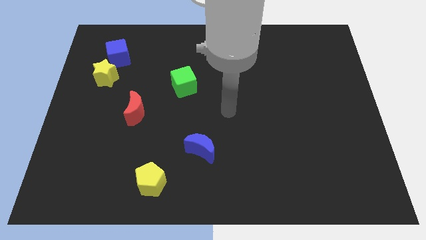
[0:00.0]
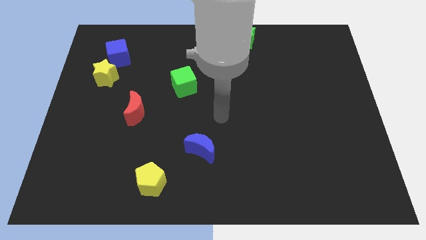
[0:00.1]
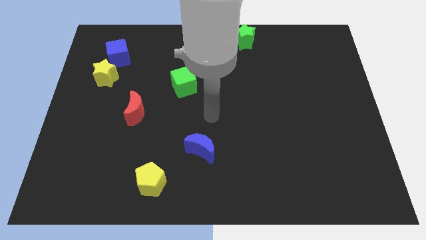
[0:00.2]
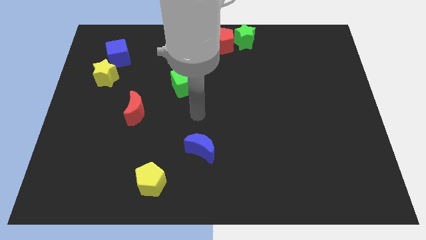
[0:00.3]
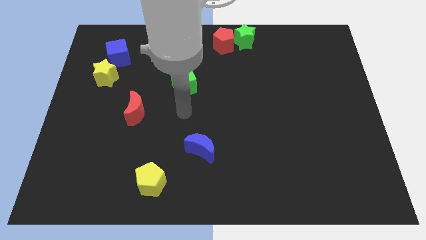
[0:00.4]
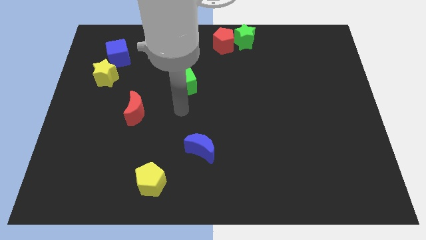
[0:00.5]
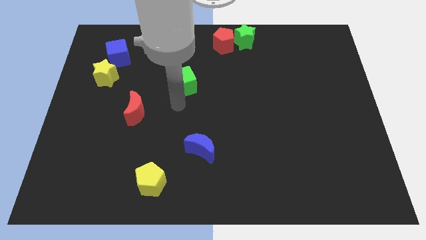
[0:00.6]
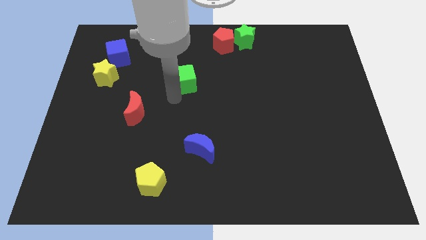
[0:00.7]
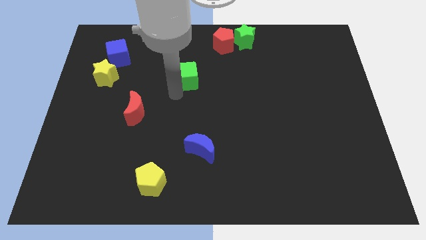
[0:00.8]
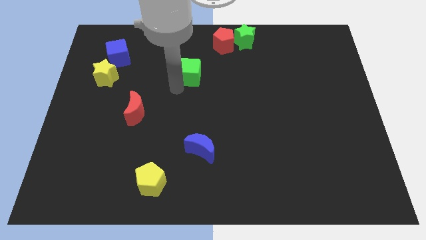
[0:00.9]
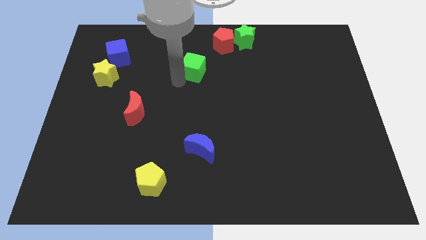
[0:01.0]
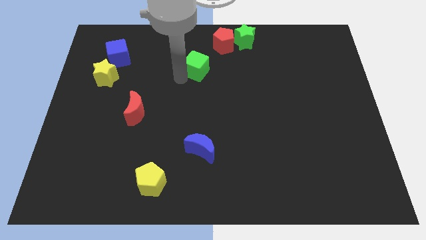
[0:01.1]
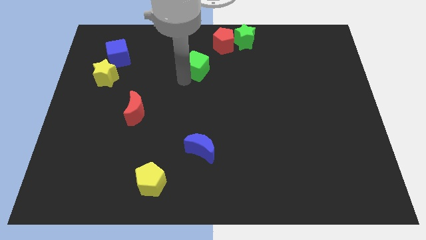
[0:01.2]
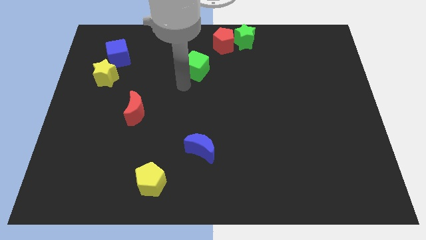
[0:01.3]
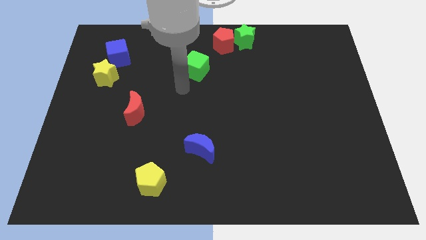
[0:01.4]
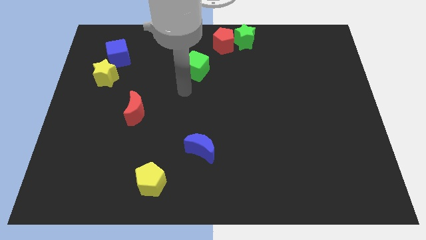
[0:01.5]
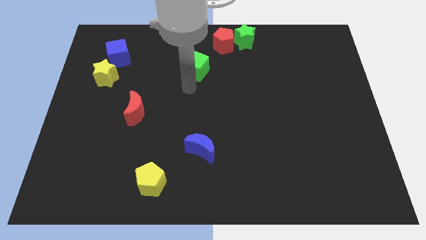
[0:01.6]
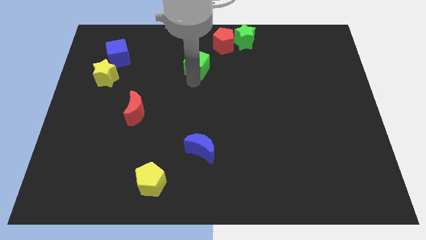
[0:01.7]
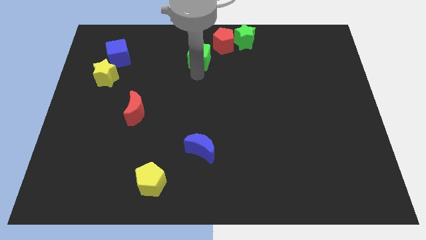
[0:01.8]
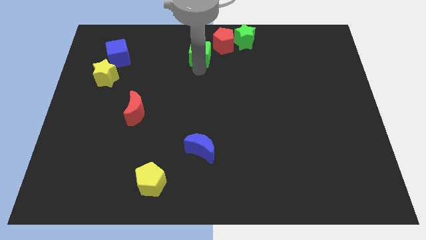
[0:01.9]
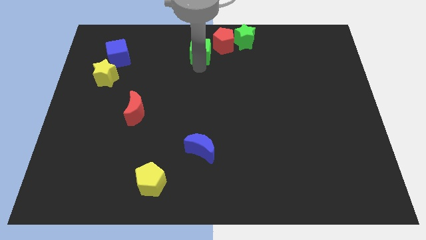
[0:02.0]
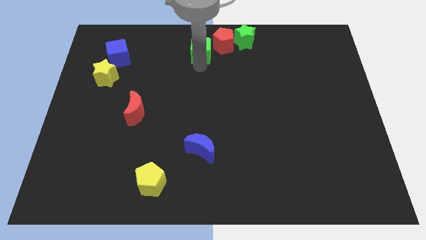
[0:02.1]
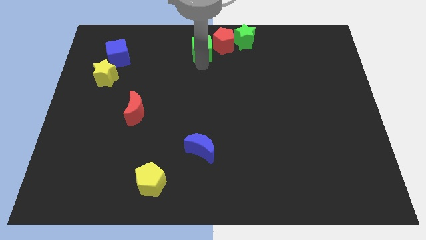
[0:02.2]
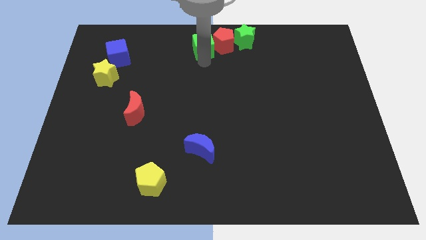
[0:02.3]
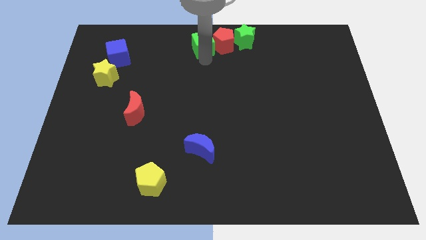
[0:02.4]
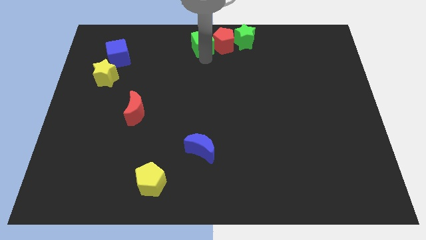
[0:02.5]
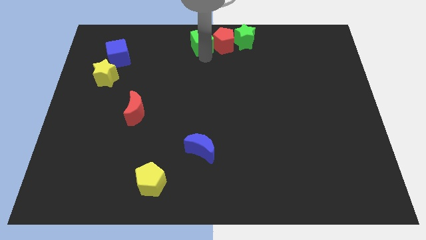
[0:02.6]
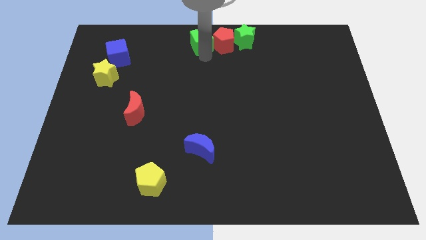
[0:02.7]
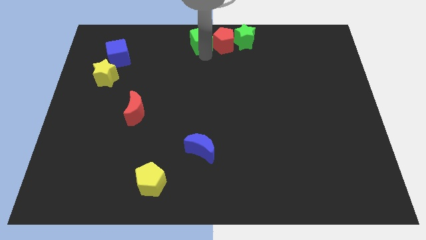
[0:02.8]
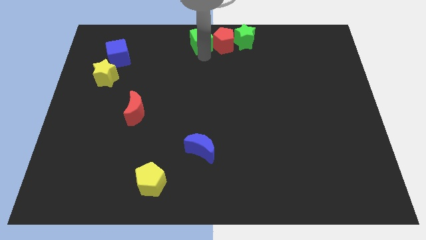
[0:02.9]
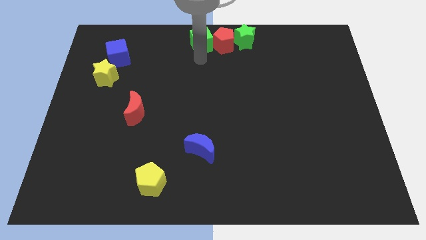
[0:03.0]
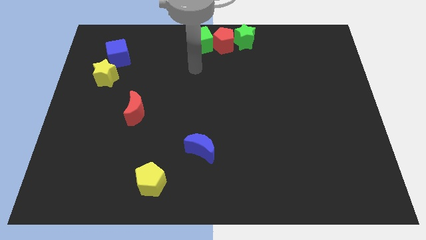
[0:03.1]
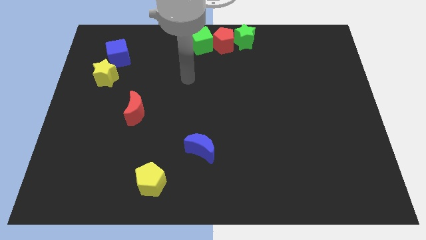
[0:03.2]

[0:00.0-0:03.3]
push the green cube to the left of the red pentagon

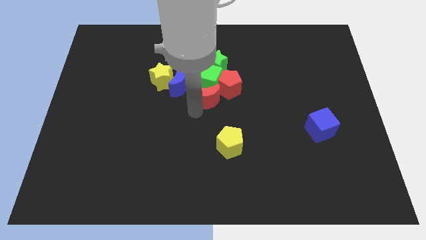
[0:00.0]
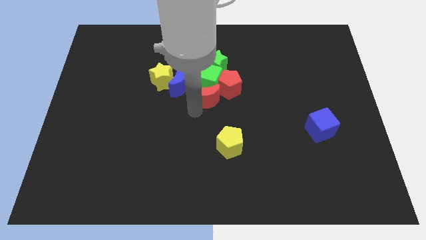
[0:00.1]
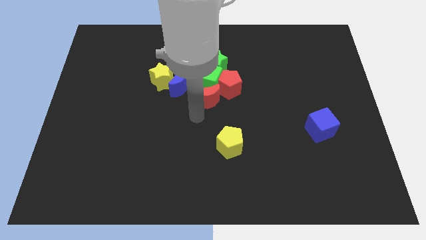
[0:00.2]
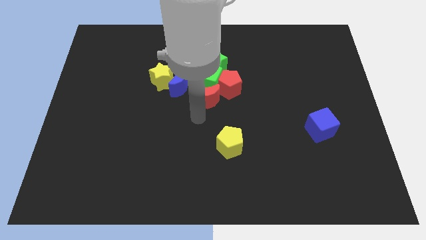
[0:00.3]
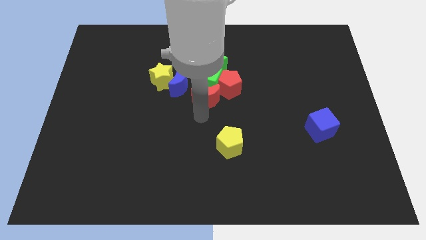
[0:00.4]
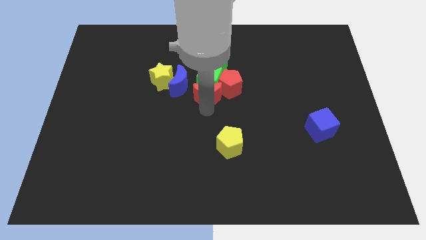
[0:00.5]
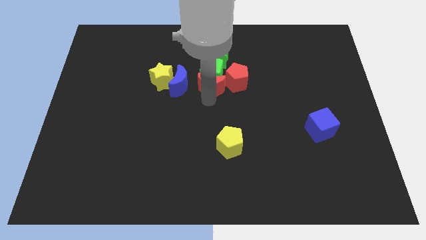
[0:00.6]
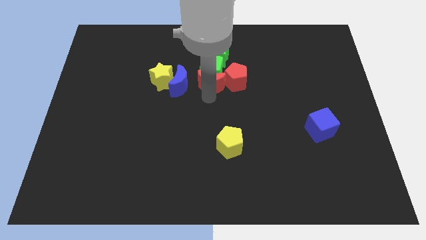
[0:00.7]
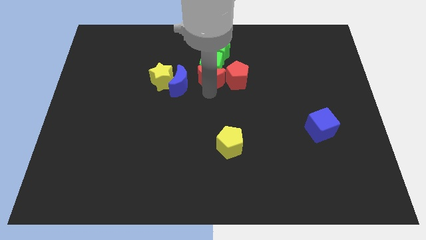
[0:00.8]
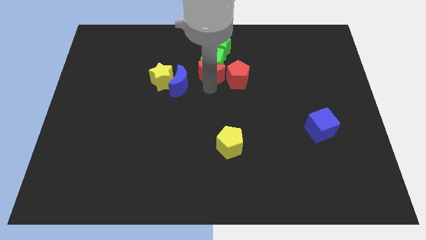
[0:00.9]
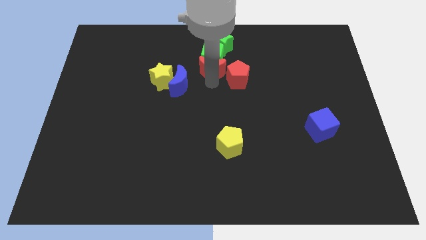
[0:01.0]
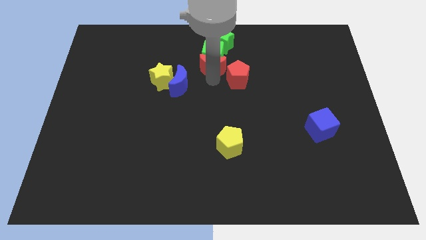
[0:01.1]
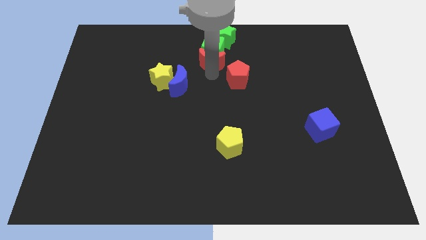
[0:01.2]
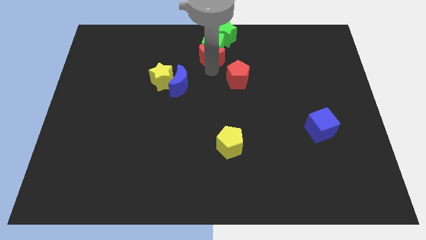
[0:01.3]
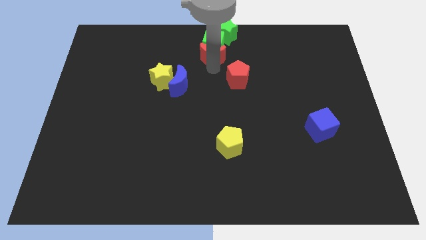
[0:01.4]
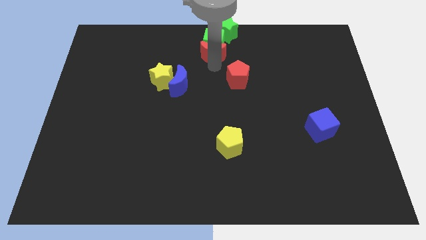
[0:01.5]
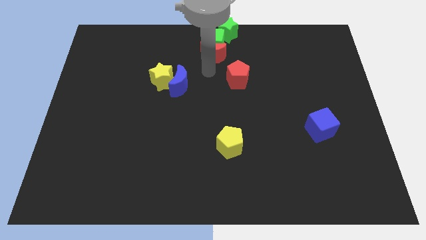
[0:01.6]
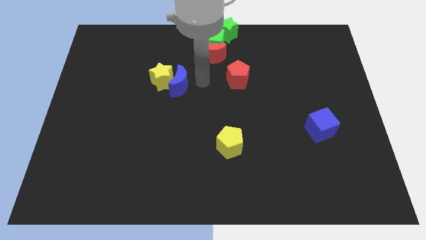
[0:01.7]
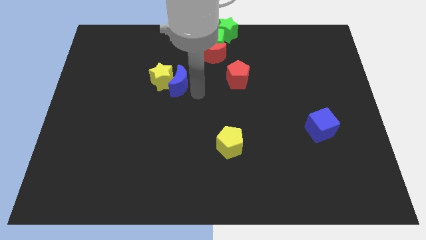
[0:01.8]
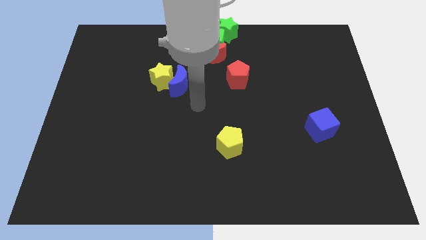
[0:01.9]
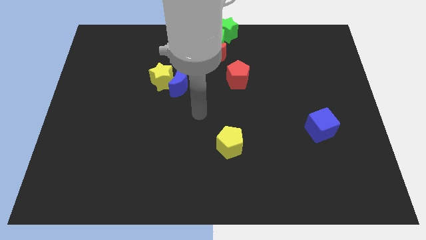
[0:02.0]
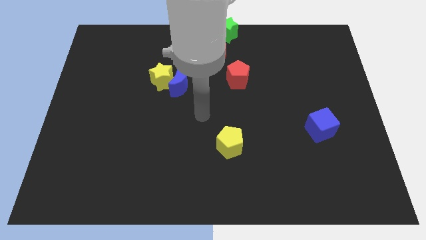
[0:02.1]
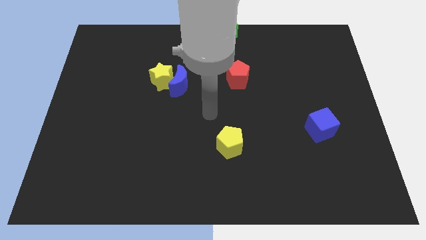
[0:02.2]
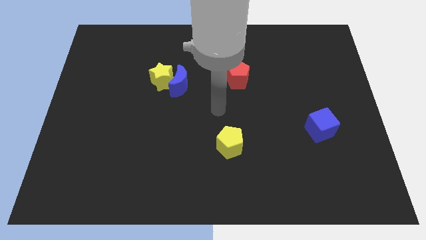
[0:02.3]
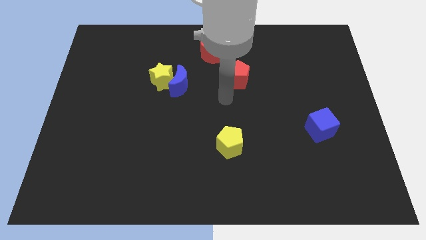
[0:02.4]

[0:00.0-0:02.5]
push red moon to the top center

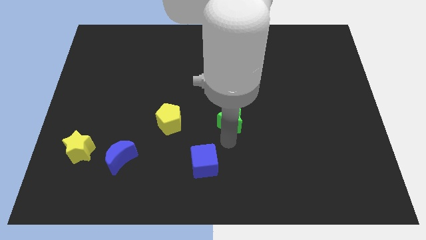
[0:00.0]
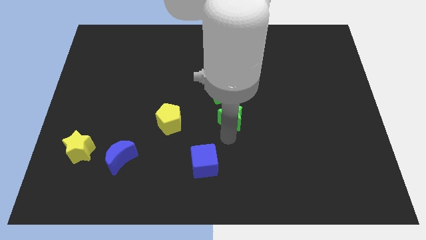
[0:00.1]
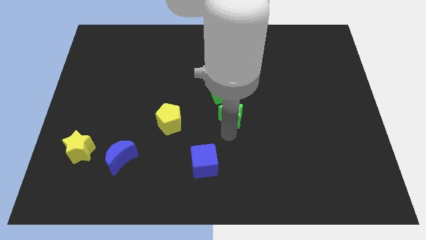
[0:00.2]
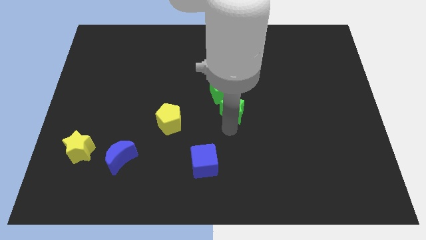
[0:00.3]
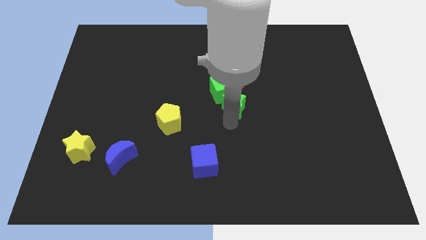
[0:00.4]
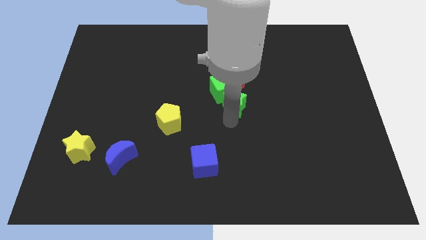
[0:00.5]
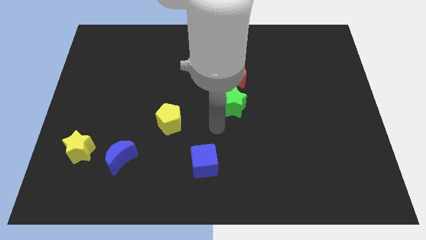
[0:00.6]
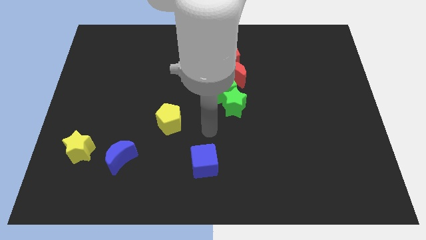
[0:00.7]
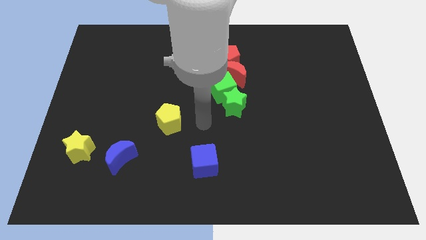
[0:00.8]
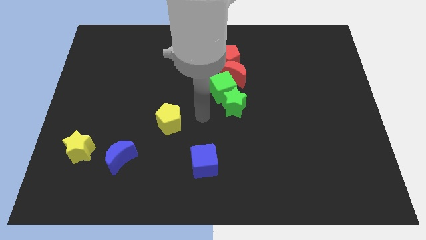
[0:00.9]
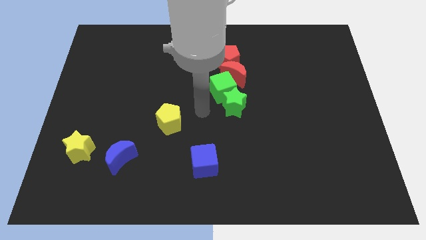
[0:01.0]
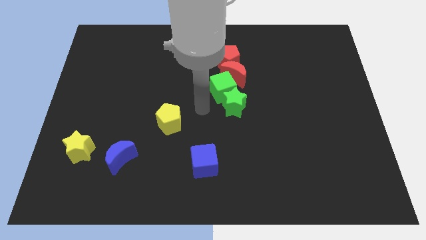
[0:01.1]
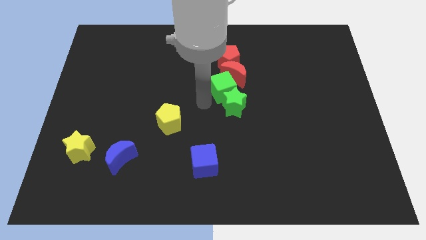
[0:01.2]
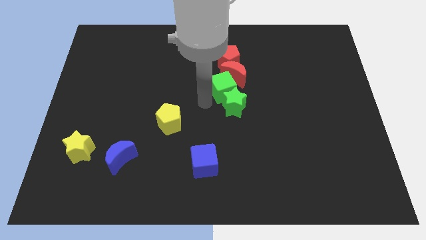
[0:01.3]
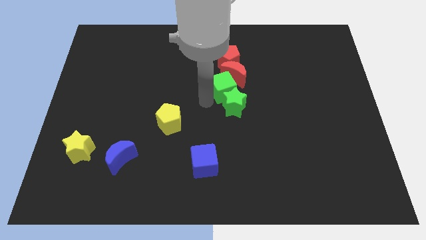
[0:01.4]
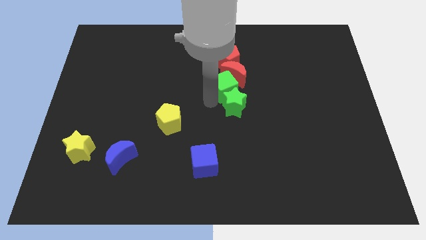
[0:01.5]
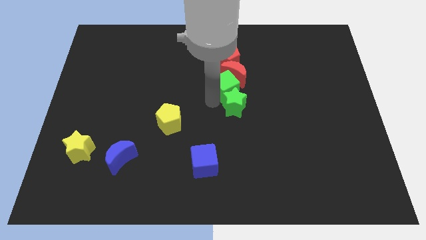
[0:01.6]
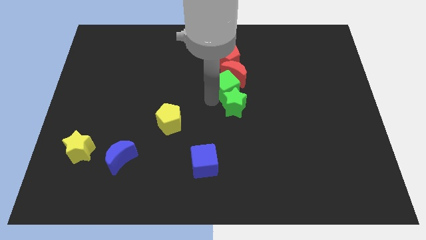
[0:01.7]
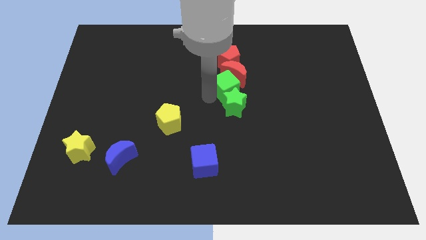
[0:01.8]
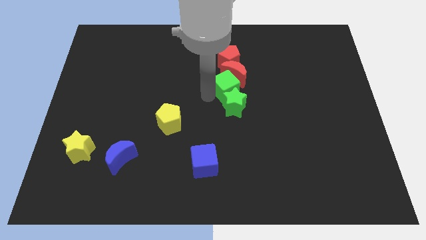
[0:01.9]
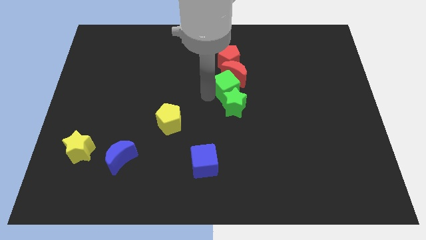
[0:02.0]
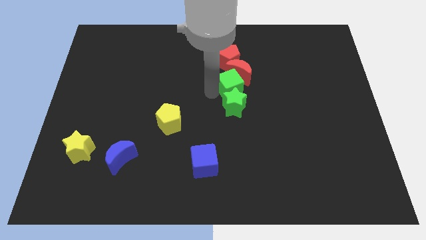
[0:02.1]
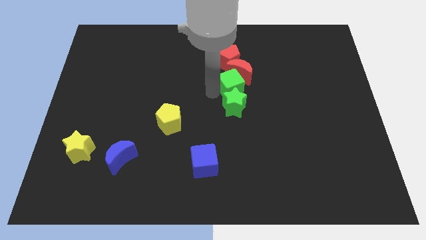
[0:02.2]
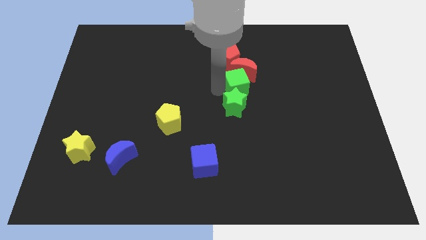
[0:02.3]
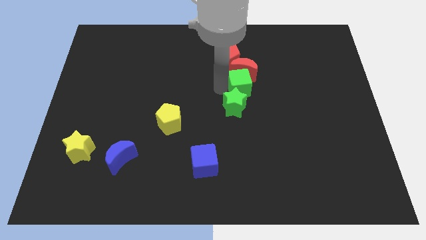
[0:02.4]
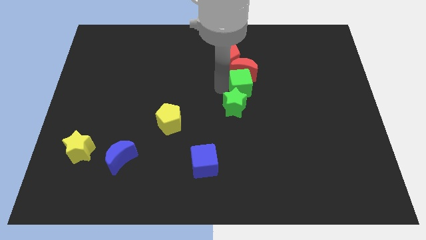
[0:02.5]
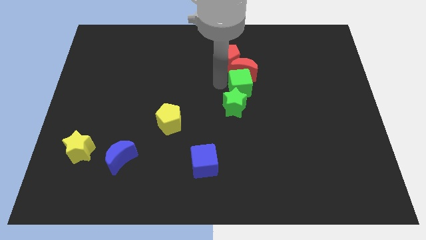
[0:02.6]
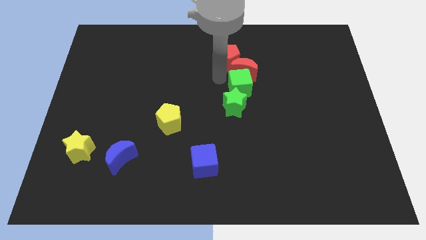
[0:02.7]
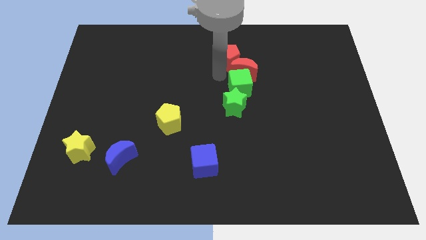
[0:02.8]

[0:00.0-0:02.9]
adjust the green cube slightly above the green star

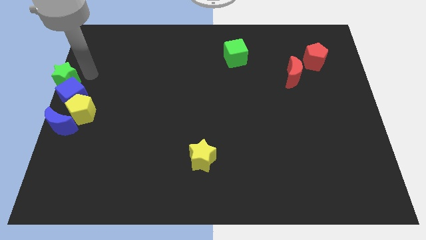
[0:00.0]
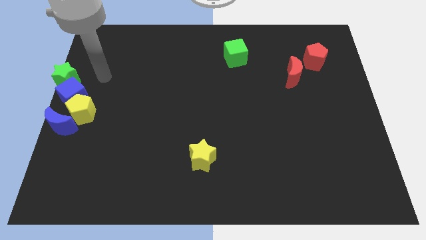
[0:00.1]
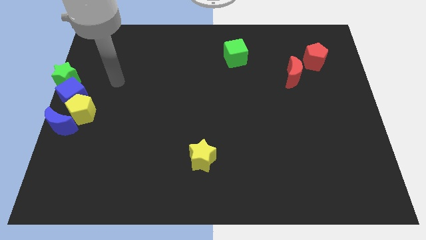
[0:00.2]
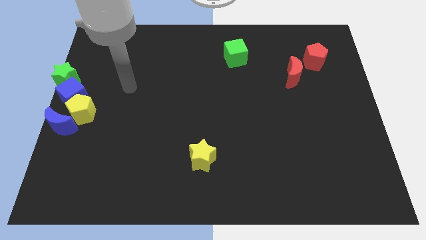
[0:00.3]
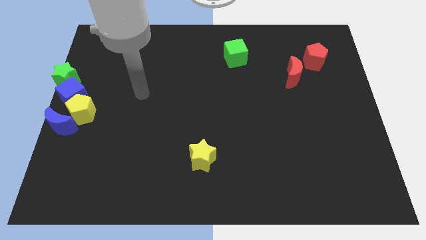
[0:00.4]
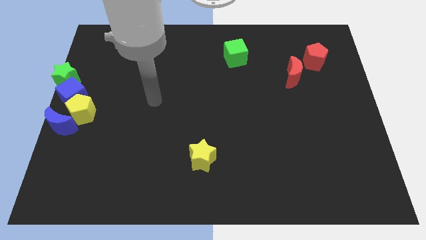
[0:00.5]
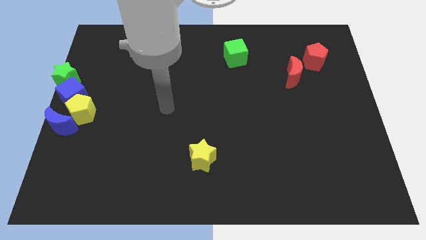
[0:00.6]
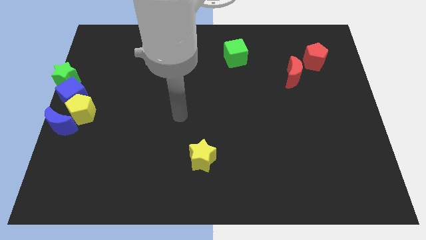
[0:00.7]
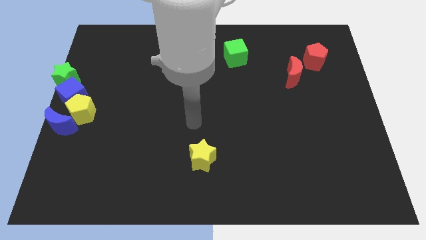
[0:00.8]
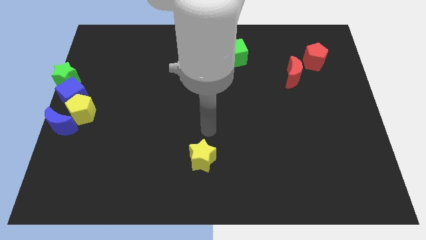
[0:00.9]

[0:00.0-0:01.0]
move the arm away from the green star
